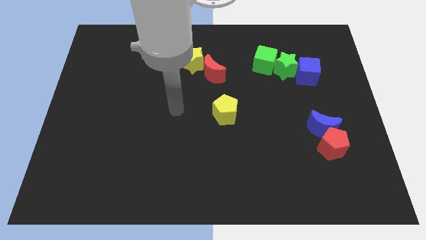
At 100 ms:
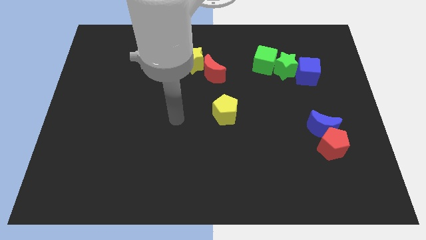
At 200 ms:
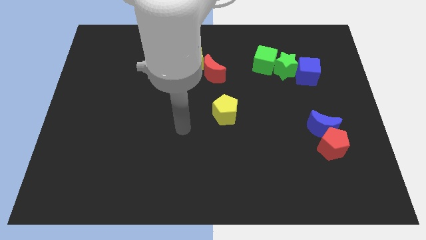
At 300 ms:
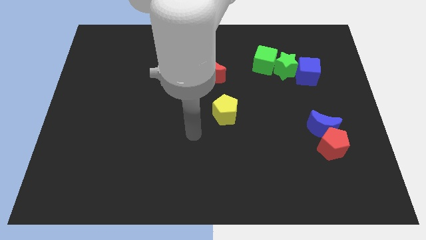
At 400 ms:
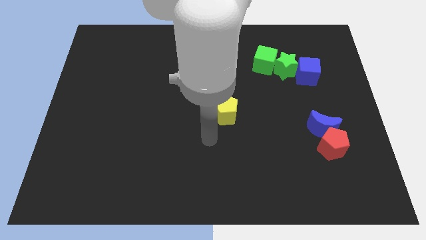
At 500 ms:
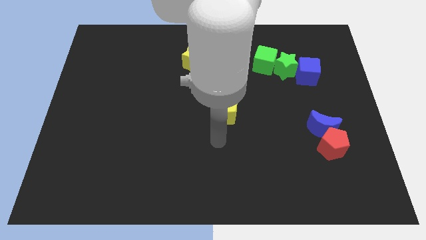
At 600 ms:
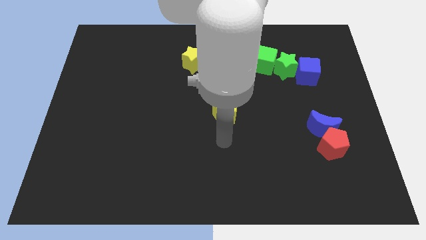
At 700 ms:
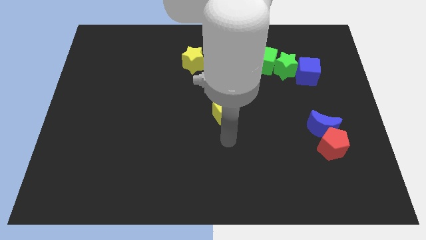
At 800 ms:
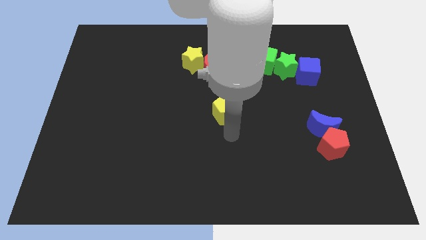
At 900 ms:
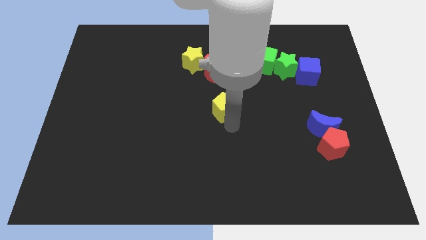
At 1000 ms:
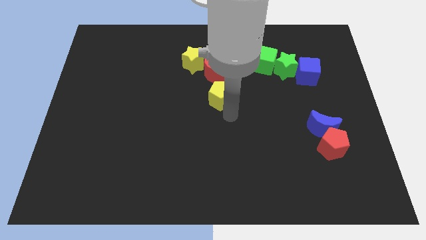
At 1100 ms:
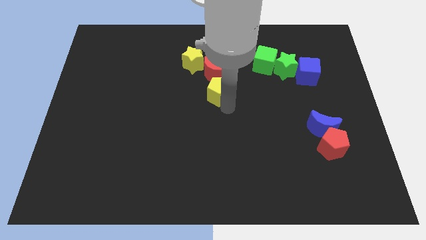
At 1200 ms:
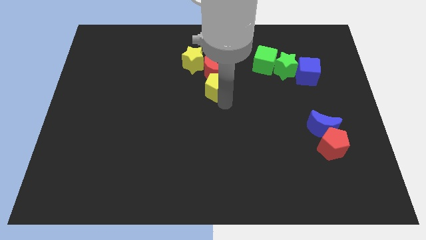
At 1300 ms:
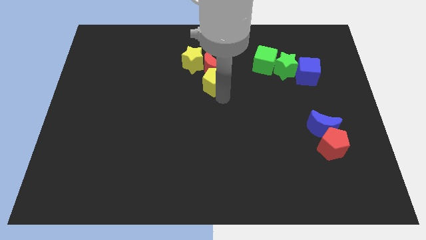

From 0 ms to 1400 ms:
move the yellow pentagon into the red moon

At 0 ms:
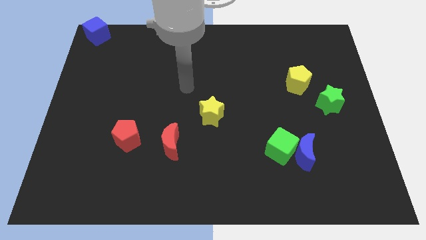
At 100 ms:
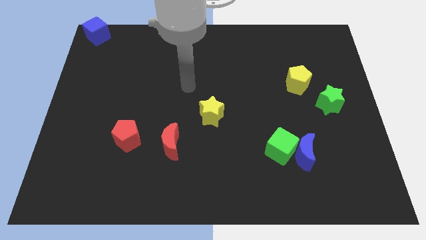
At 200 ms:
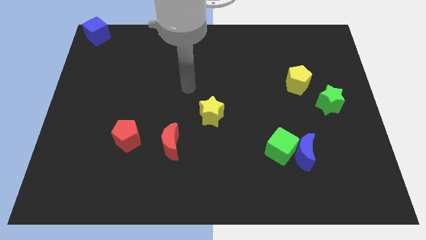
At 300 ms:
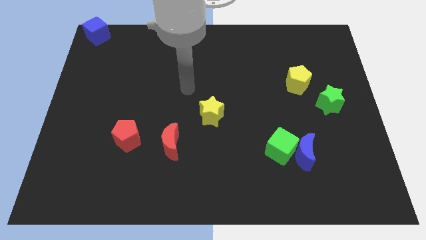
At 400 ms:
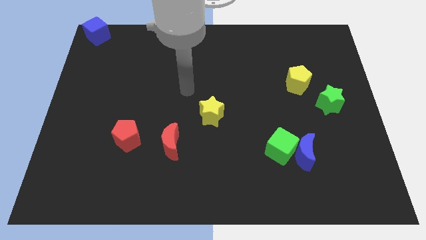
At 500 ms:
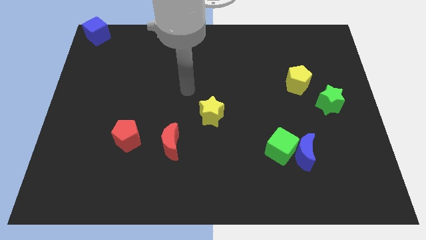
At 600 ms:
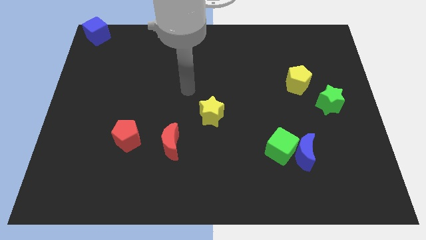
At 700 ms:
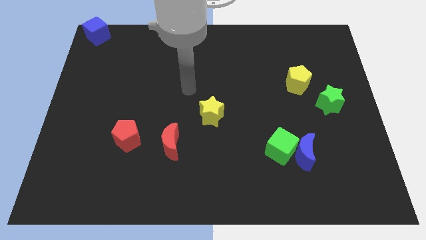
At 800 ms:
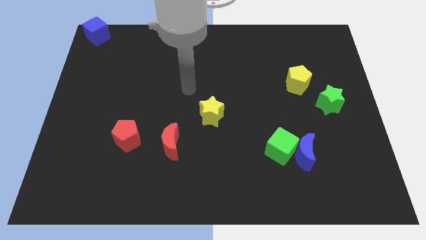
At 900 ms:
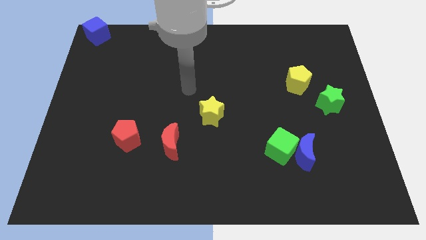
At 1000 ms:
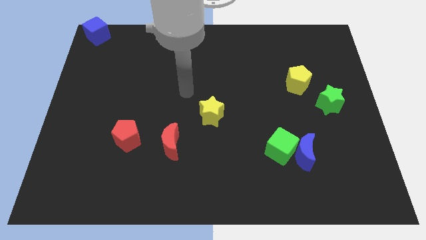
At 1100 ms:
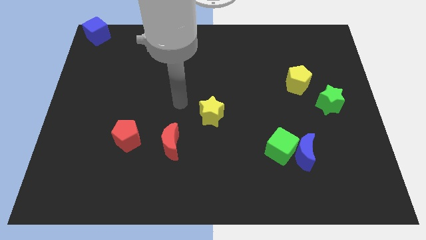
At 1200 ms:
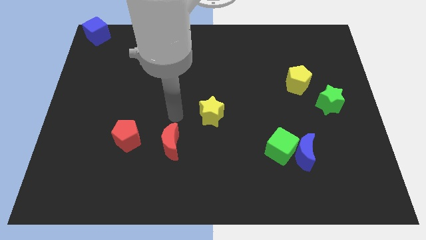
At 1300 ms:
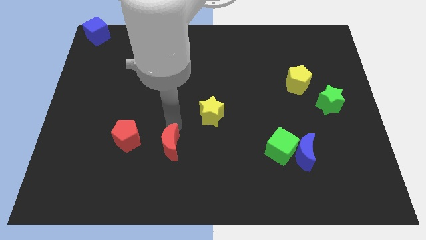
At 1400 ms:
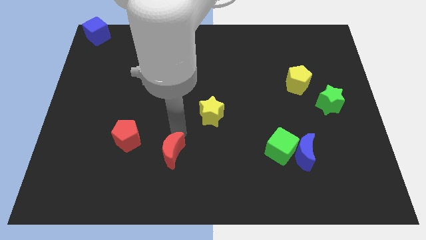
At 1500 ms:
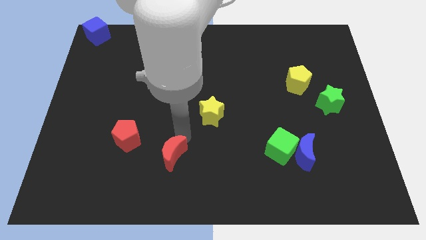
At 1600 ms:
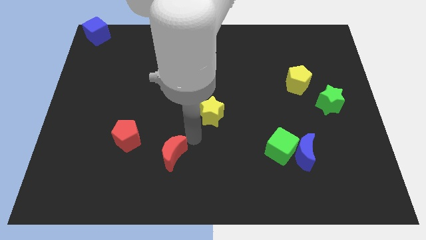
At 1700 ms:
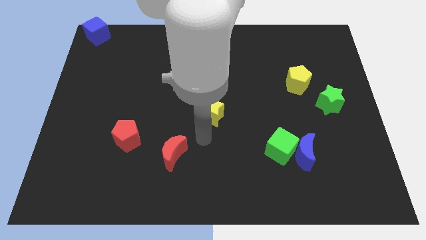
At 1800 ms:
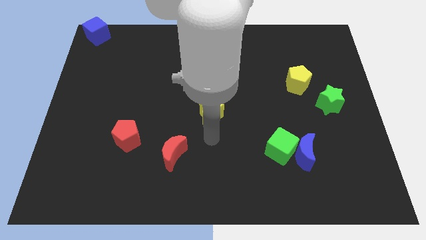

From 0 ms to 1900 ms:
push the red moon slightly towards bottom of the board

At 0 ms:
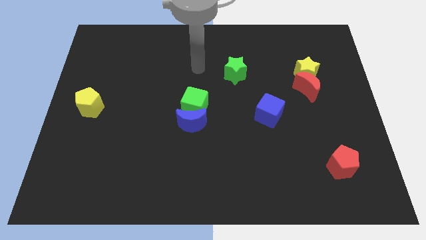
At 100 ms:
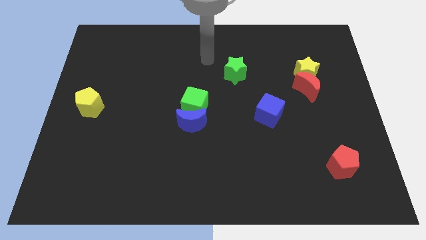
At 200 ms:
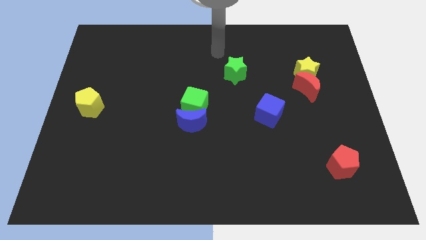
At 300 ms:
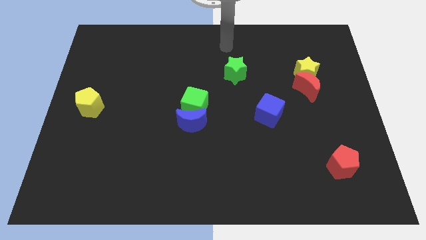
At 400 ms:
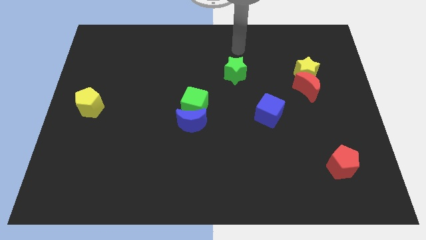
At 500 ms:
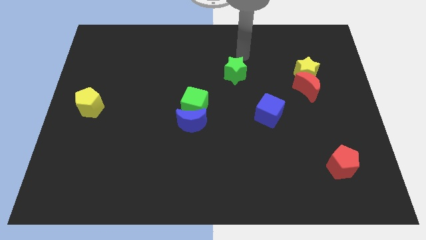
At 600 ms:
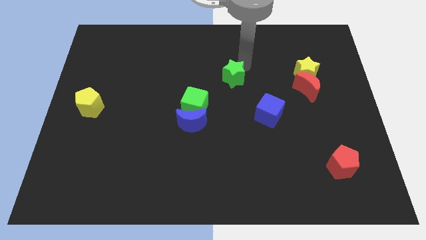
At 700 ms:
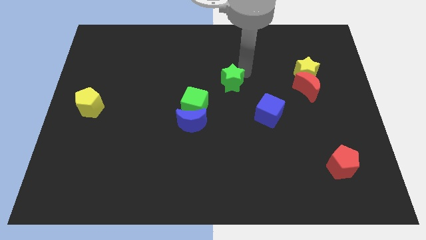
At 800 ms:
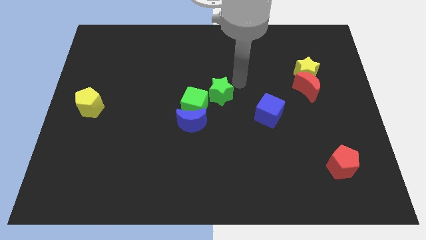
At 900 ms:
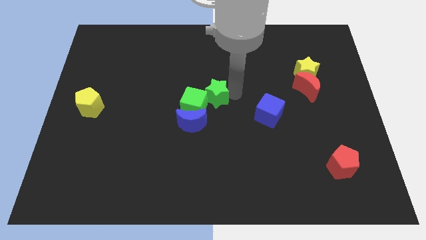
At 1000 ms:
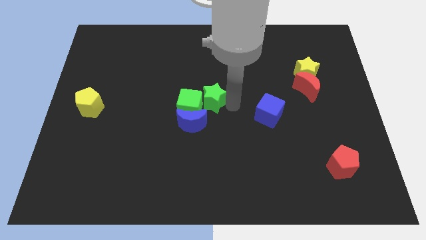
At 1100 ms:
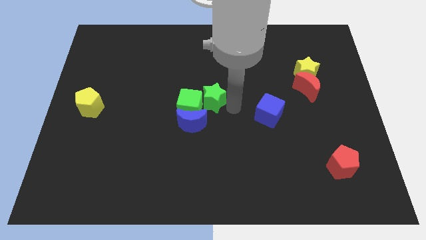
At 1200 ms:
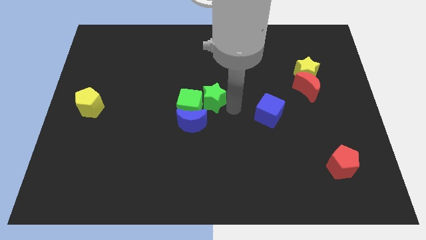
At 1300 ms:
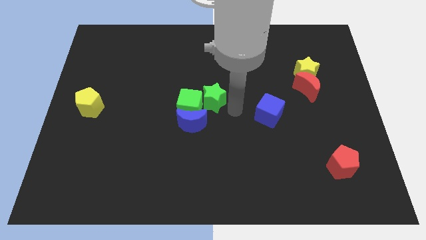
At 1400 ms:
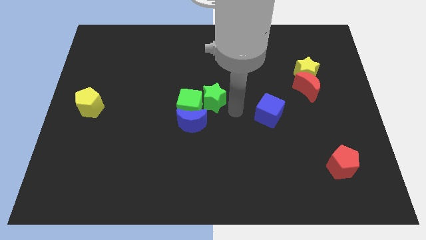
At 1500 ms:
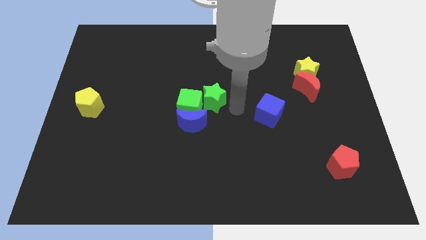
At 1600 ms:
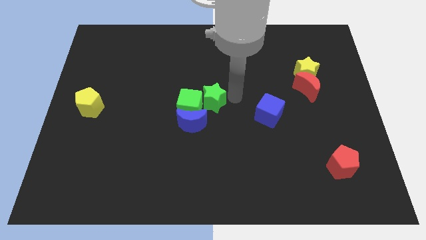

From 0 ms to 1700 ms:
push green star beside green cube

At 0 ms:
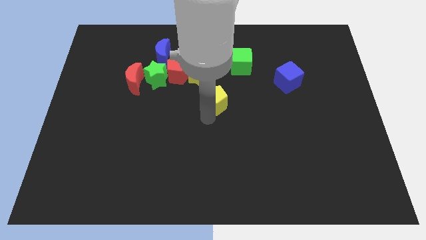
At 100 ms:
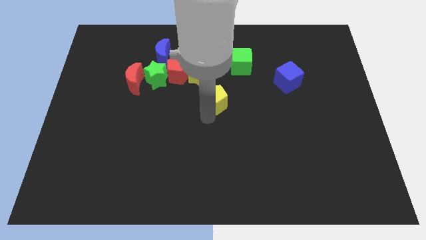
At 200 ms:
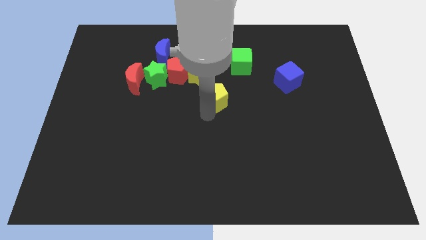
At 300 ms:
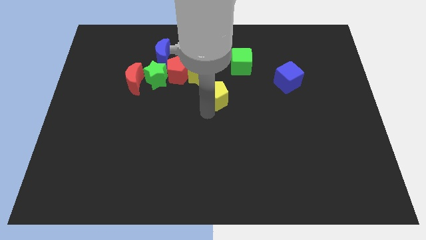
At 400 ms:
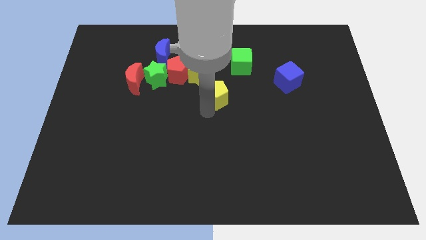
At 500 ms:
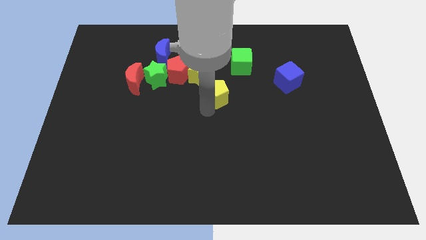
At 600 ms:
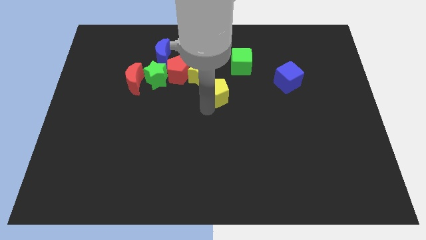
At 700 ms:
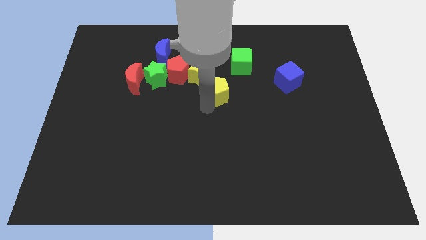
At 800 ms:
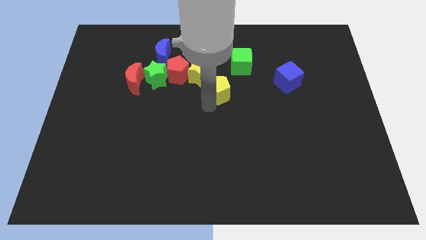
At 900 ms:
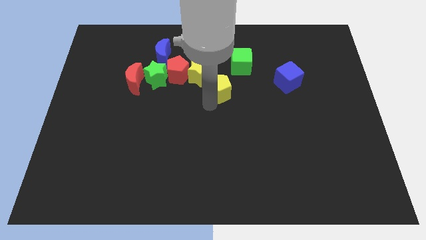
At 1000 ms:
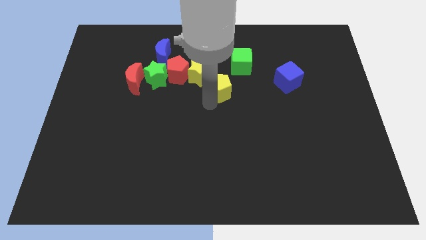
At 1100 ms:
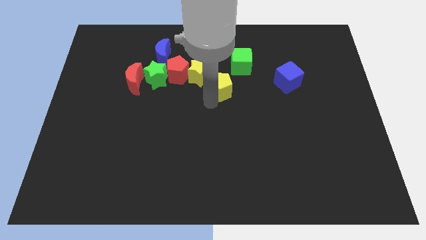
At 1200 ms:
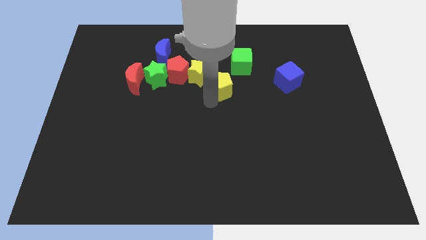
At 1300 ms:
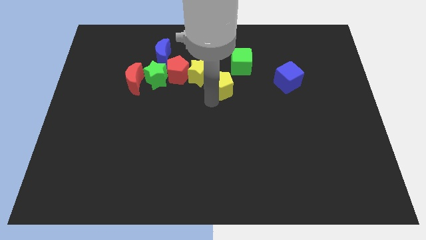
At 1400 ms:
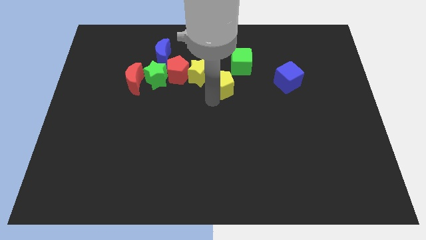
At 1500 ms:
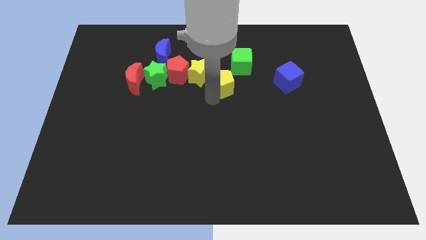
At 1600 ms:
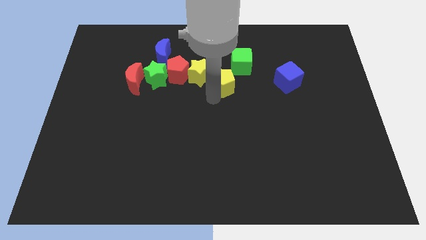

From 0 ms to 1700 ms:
place yellow pentagon right to yellow star

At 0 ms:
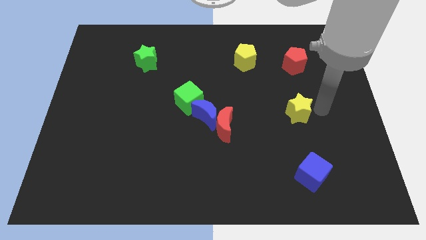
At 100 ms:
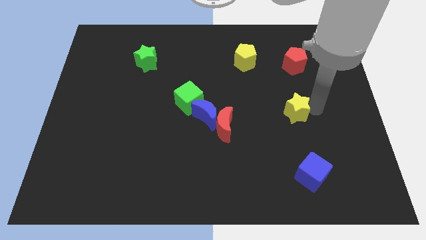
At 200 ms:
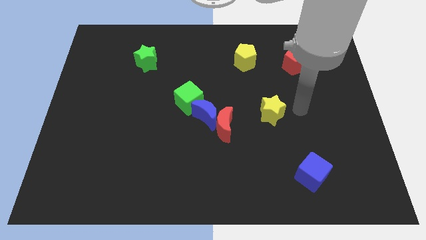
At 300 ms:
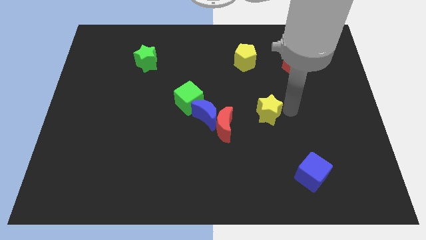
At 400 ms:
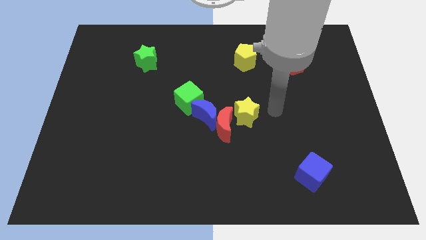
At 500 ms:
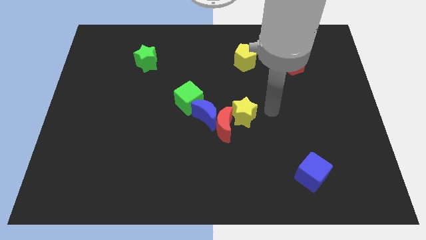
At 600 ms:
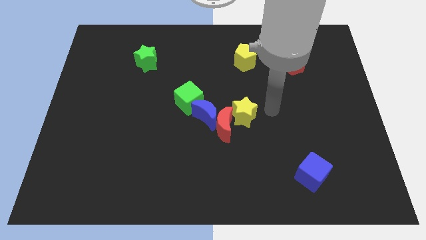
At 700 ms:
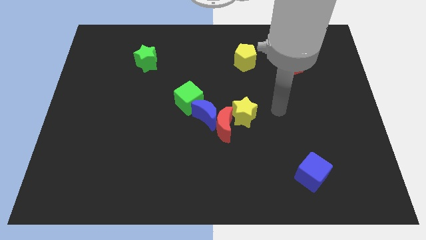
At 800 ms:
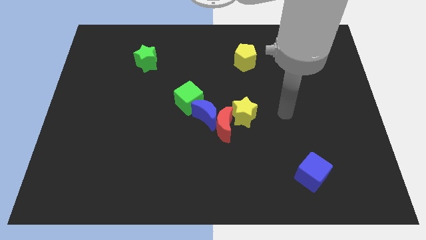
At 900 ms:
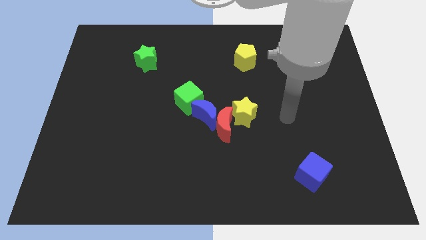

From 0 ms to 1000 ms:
place the yellow star diagonally top right of the red moon

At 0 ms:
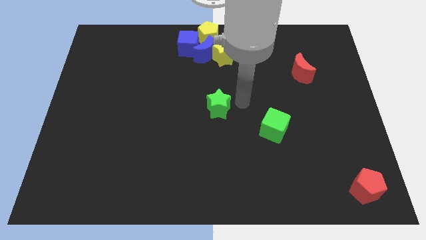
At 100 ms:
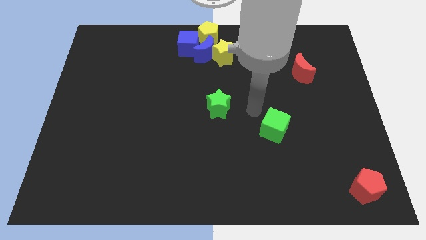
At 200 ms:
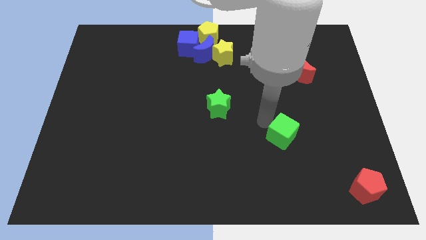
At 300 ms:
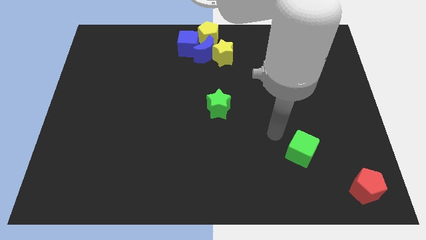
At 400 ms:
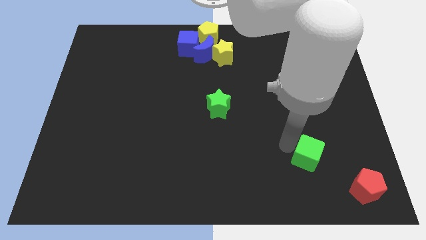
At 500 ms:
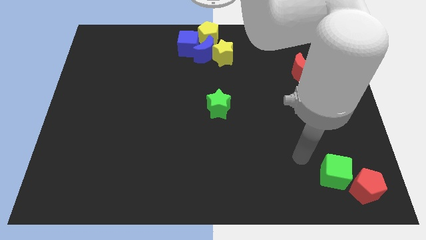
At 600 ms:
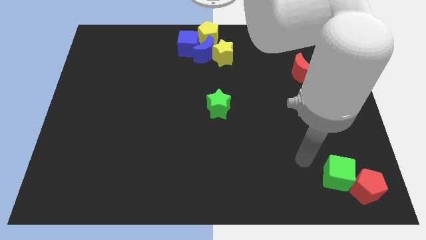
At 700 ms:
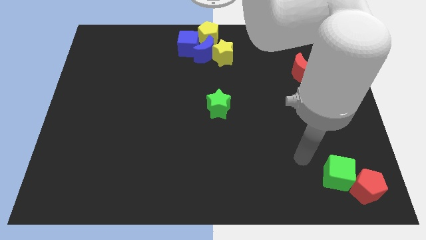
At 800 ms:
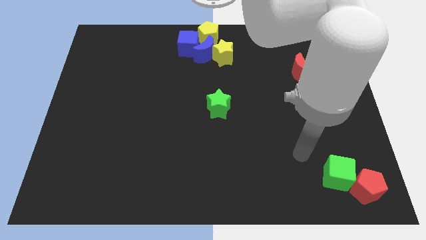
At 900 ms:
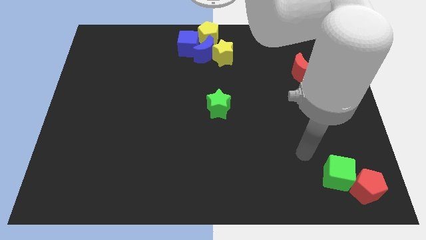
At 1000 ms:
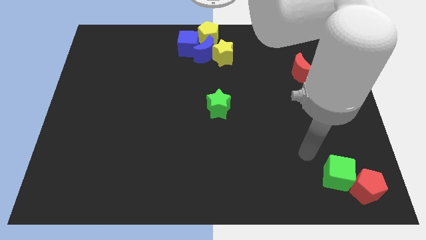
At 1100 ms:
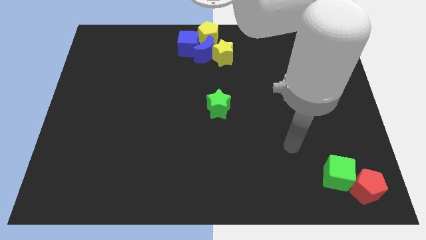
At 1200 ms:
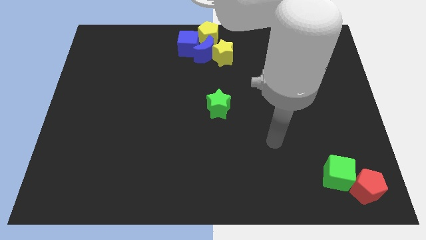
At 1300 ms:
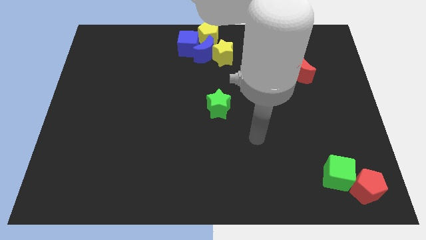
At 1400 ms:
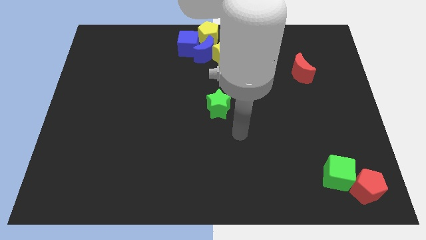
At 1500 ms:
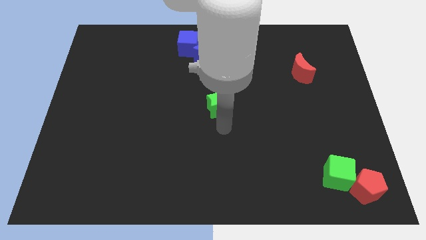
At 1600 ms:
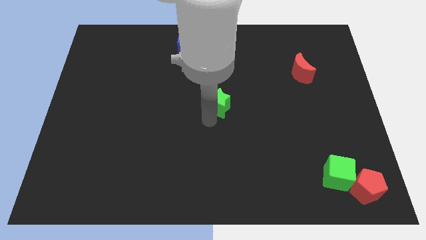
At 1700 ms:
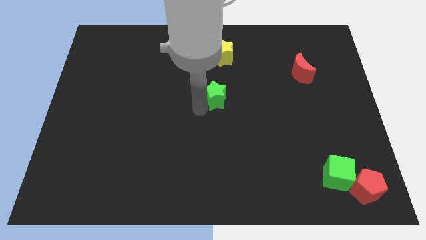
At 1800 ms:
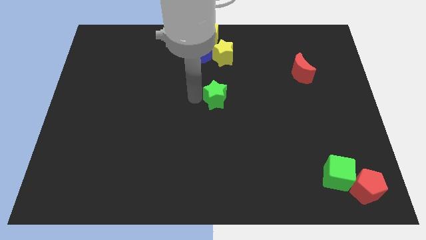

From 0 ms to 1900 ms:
push the green cube close to the red pentagon
